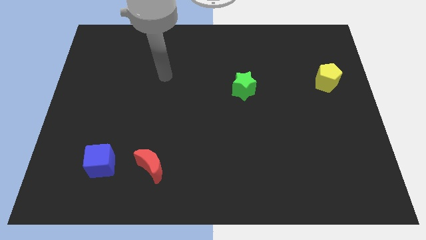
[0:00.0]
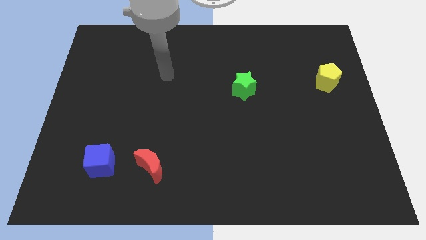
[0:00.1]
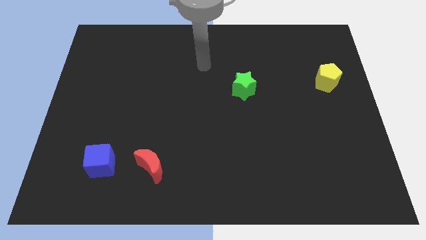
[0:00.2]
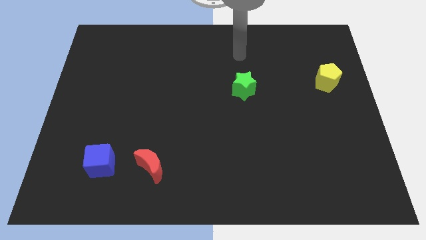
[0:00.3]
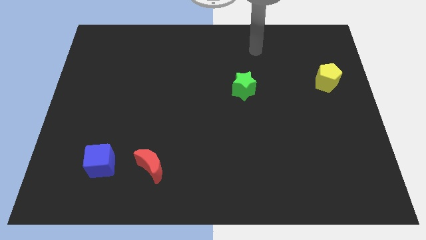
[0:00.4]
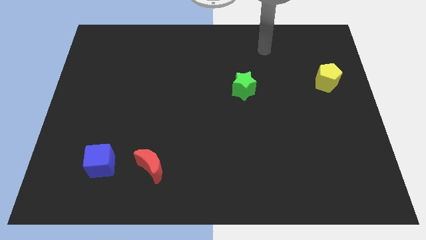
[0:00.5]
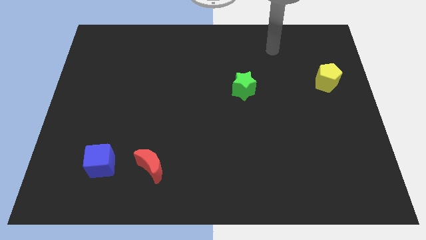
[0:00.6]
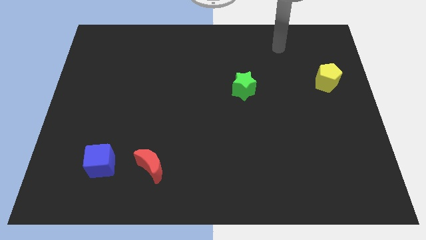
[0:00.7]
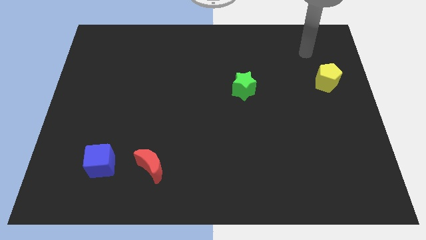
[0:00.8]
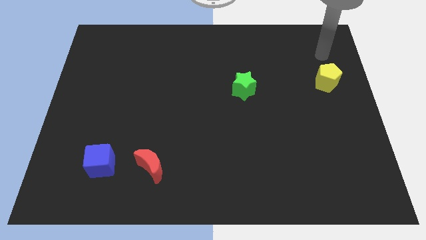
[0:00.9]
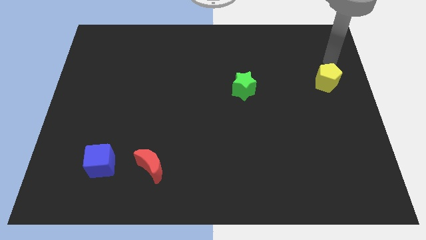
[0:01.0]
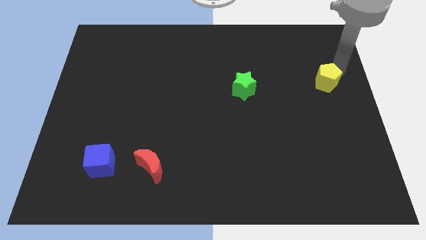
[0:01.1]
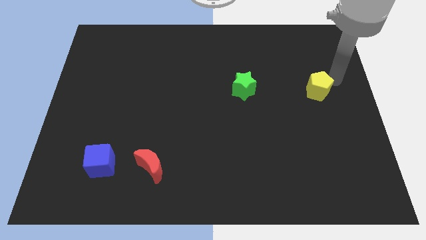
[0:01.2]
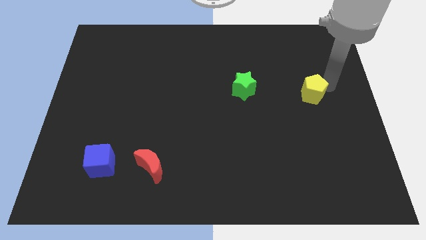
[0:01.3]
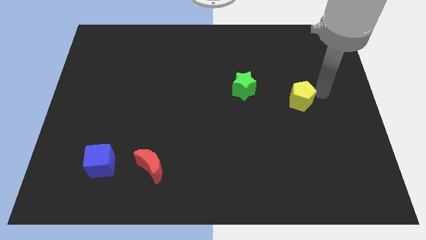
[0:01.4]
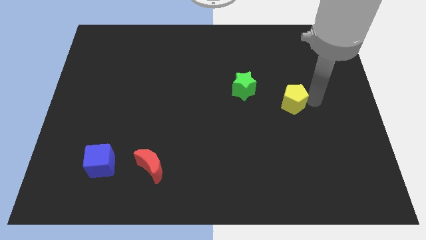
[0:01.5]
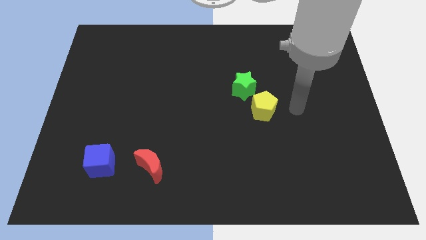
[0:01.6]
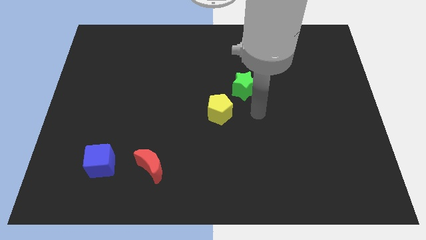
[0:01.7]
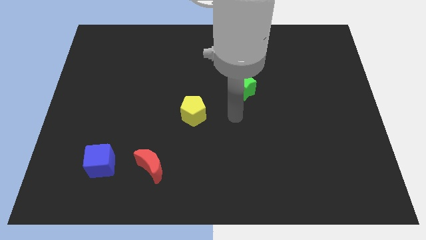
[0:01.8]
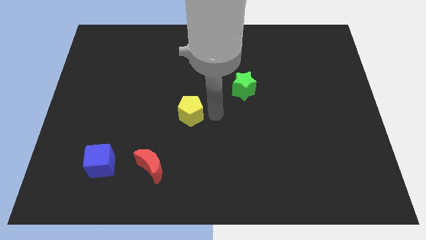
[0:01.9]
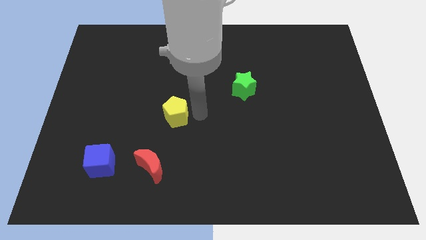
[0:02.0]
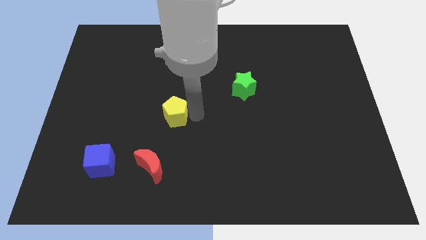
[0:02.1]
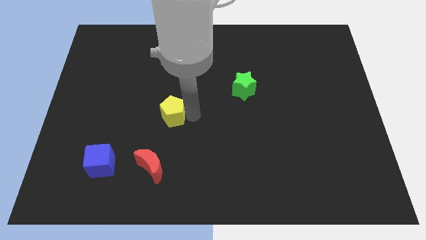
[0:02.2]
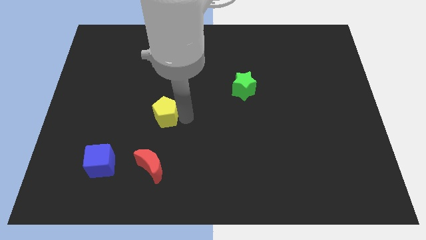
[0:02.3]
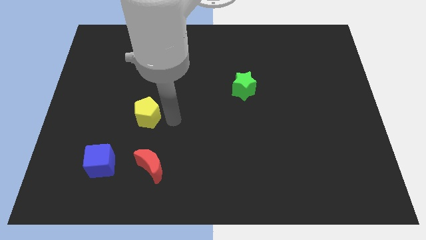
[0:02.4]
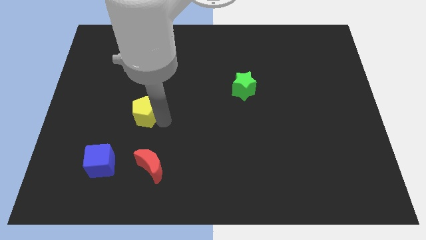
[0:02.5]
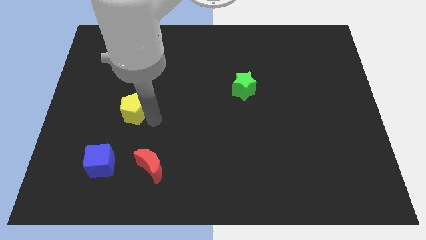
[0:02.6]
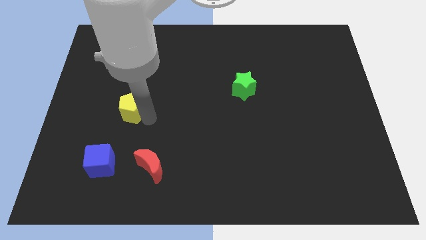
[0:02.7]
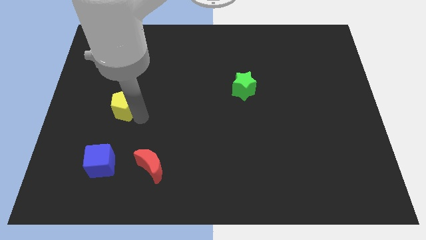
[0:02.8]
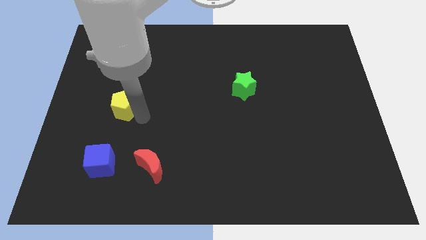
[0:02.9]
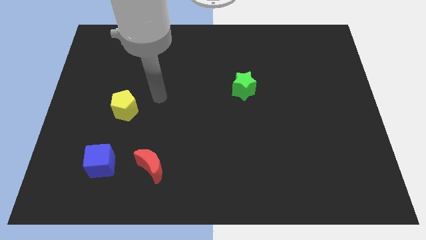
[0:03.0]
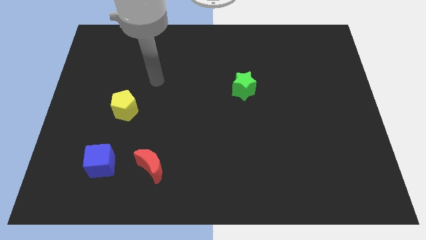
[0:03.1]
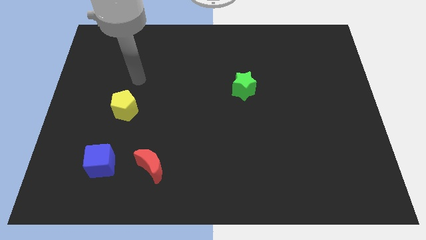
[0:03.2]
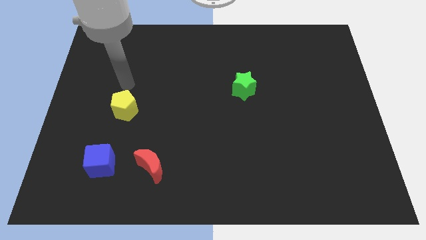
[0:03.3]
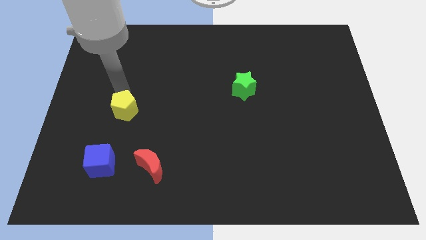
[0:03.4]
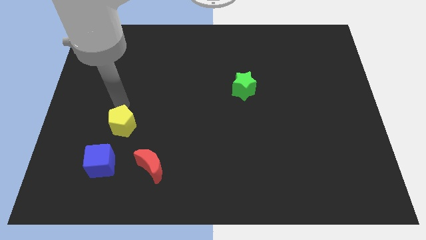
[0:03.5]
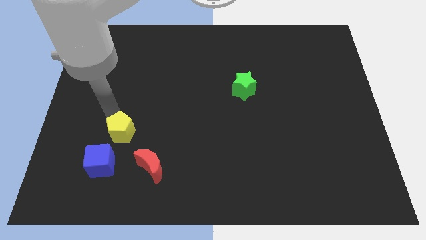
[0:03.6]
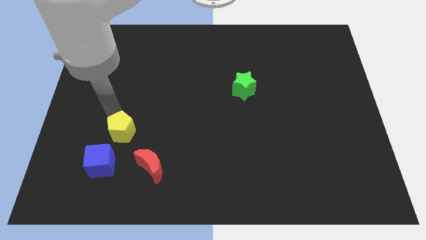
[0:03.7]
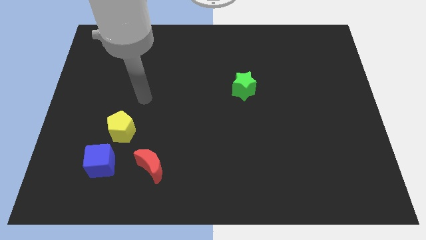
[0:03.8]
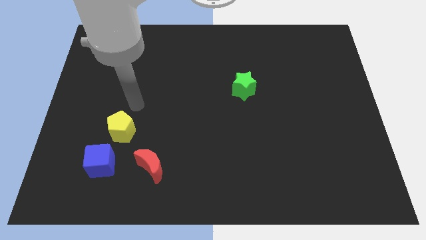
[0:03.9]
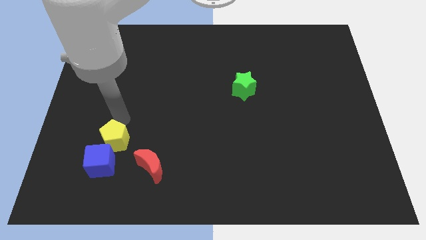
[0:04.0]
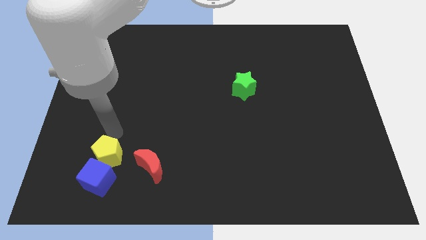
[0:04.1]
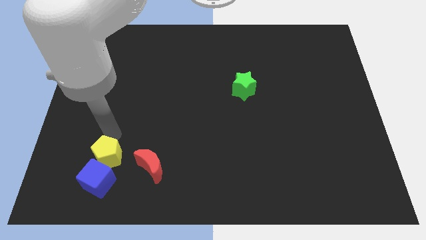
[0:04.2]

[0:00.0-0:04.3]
push the pentagon towards the blue cube

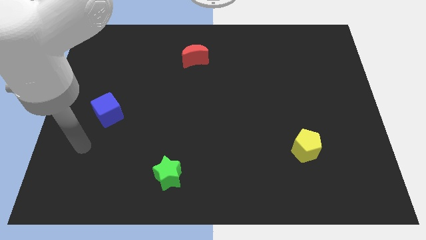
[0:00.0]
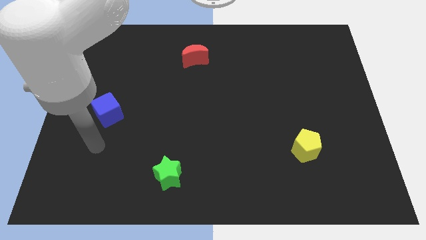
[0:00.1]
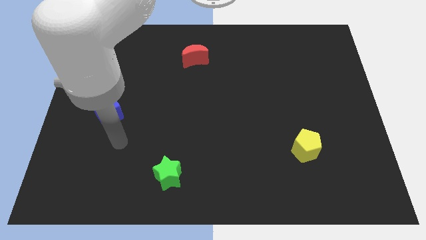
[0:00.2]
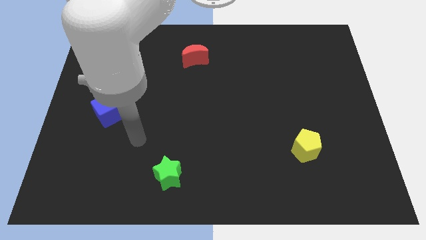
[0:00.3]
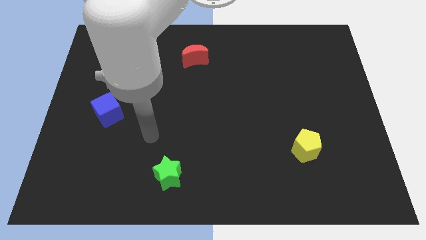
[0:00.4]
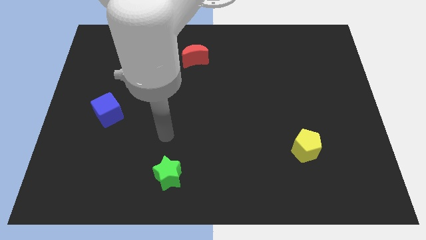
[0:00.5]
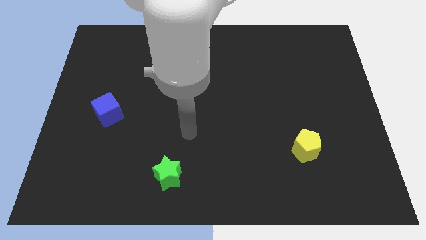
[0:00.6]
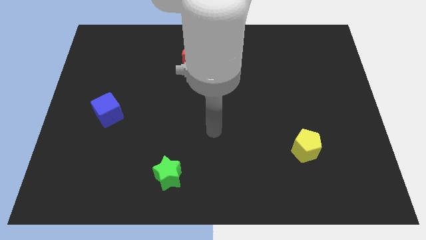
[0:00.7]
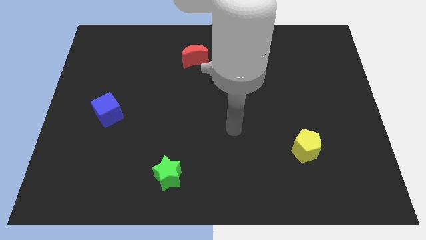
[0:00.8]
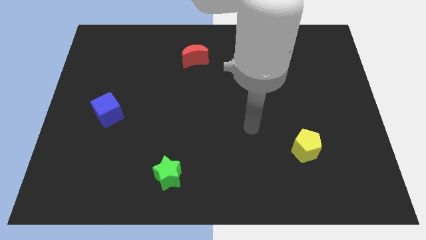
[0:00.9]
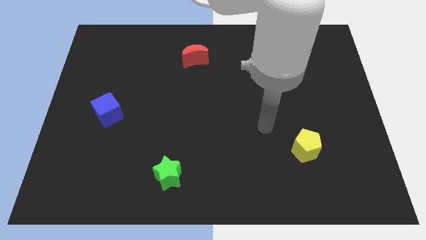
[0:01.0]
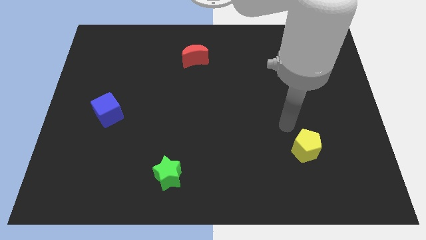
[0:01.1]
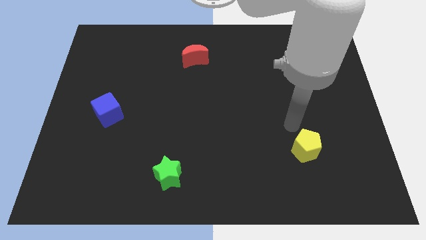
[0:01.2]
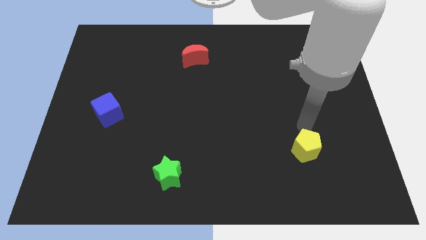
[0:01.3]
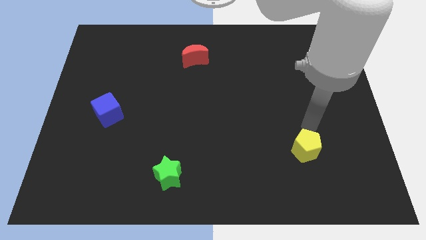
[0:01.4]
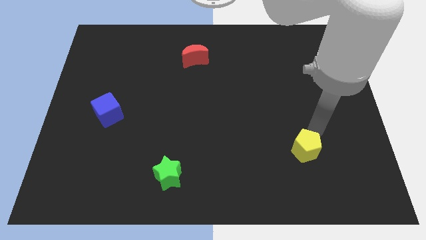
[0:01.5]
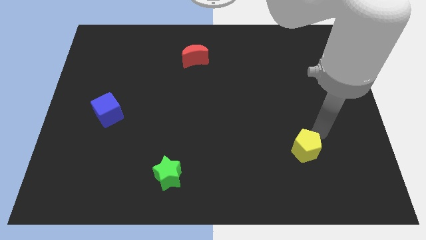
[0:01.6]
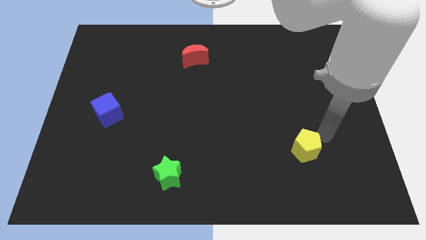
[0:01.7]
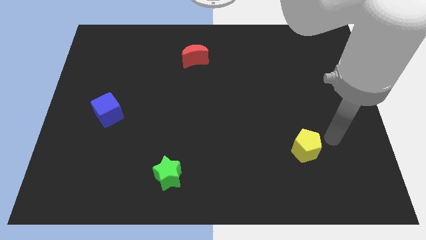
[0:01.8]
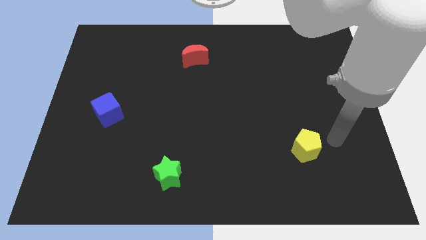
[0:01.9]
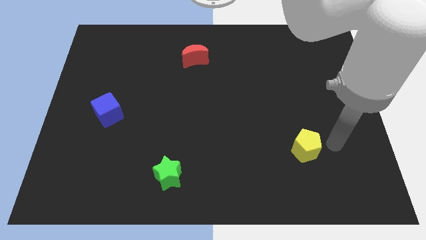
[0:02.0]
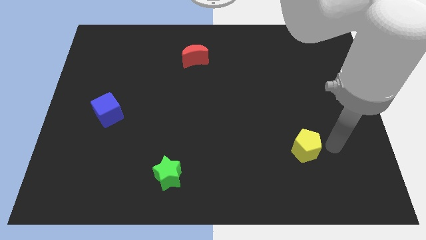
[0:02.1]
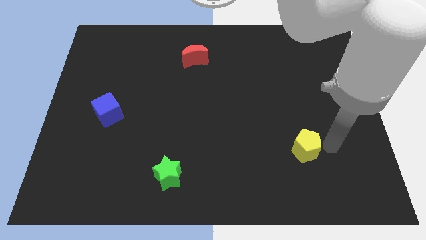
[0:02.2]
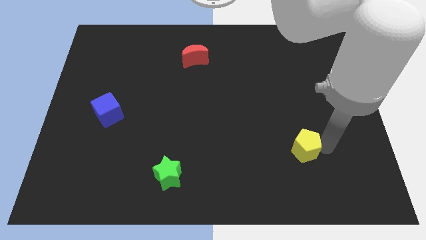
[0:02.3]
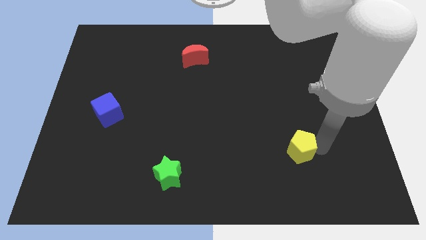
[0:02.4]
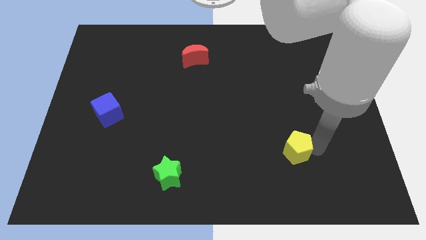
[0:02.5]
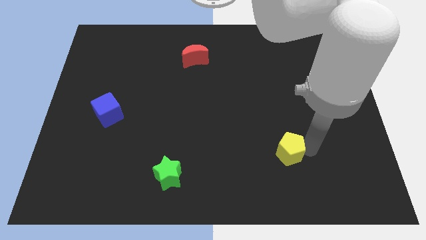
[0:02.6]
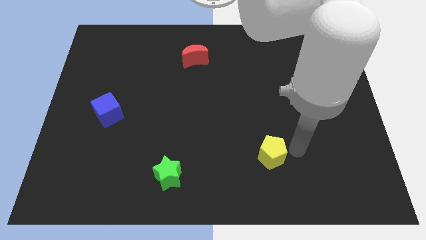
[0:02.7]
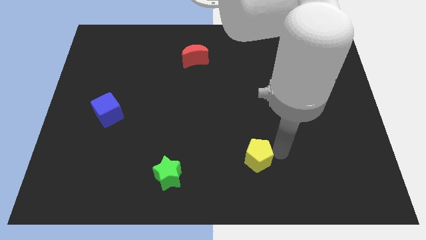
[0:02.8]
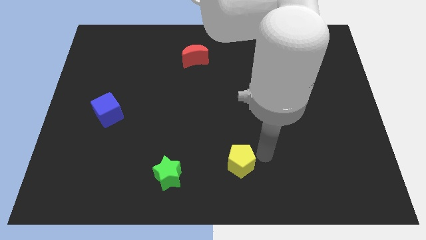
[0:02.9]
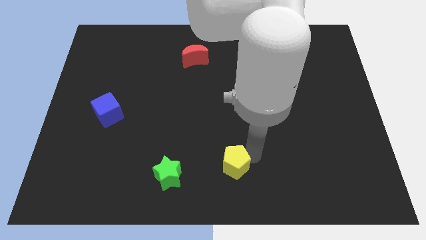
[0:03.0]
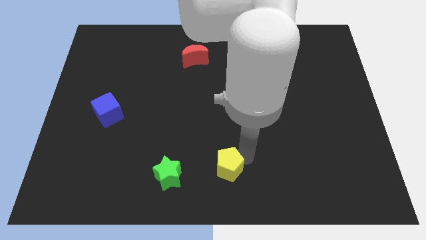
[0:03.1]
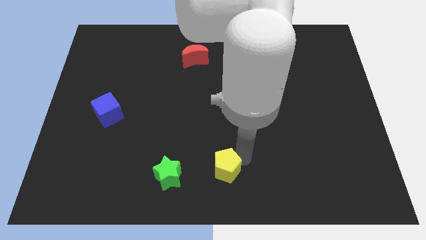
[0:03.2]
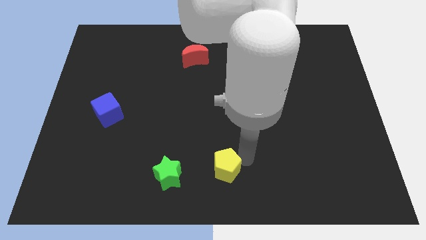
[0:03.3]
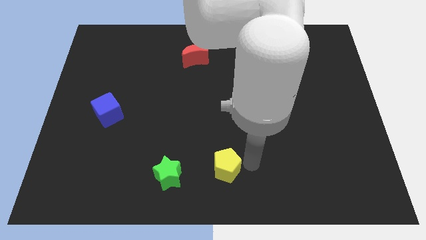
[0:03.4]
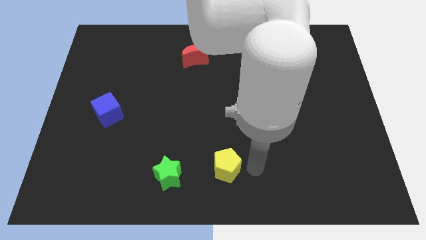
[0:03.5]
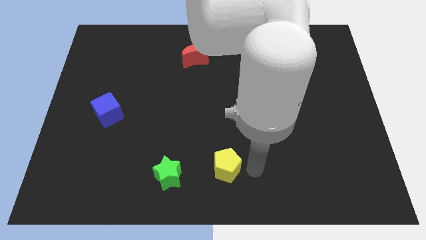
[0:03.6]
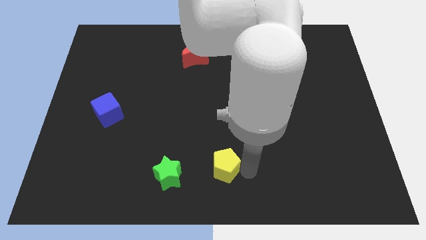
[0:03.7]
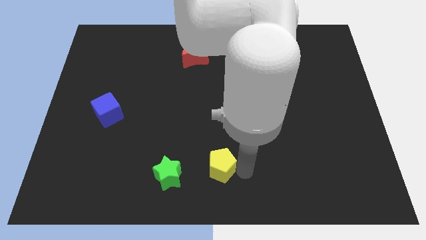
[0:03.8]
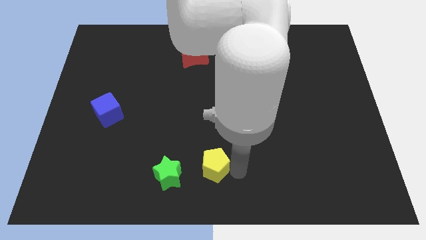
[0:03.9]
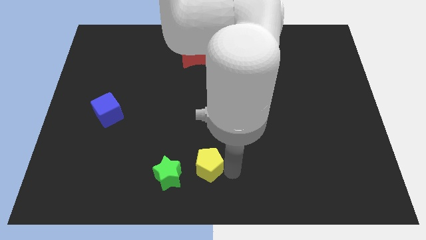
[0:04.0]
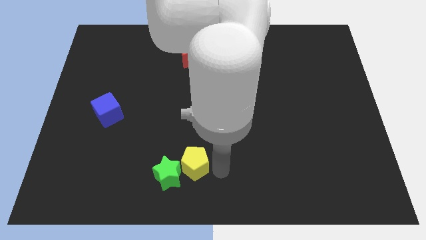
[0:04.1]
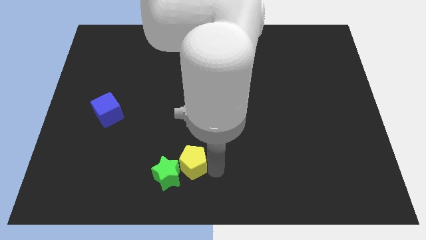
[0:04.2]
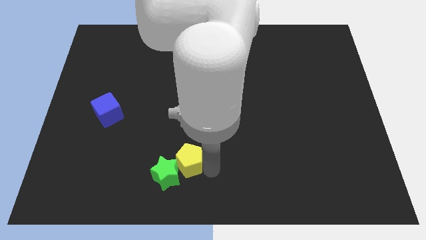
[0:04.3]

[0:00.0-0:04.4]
push the pentagon towards the star
